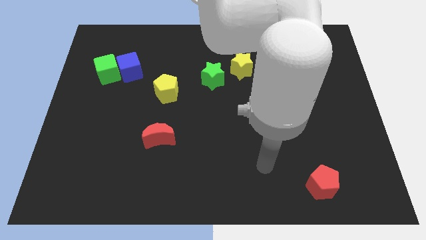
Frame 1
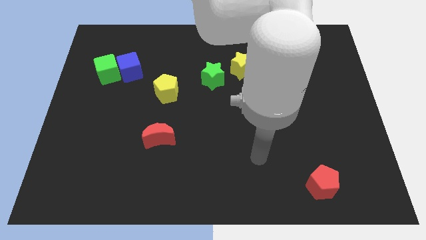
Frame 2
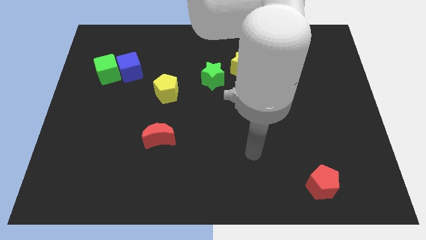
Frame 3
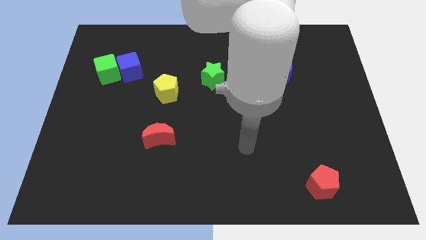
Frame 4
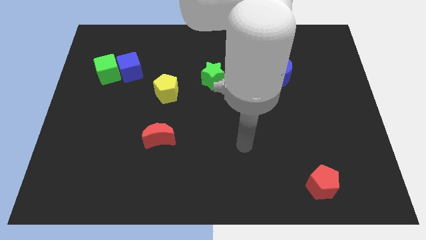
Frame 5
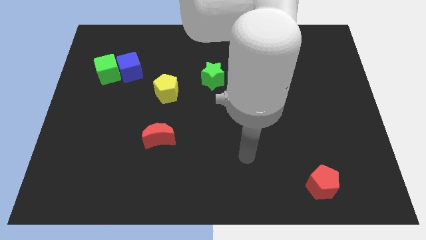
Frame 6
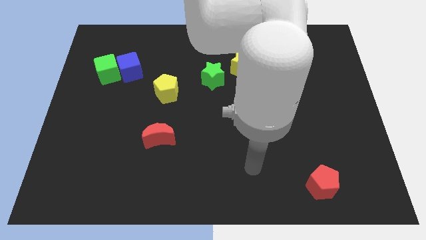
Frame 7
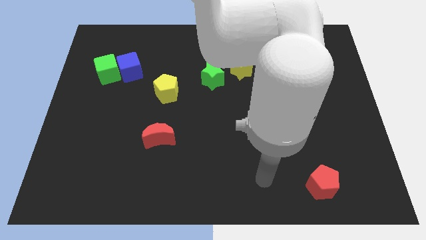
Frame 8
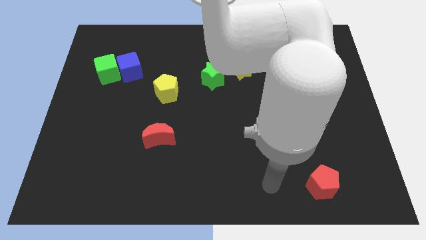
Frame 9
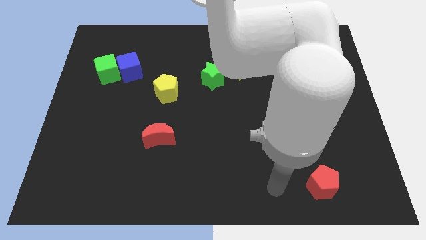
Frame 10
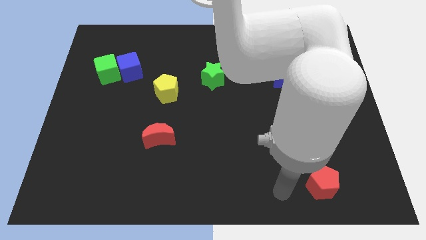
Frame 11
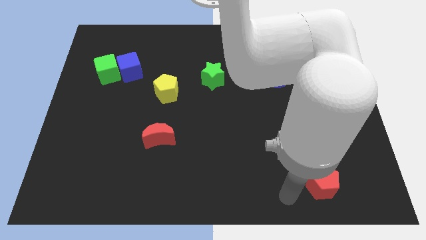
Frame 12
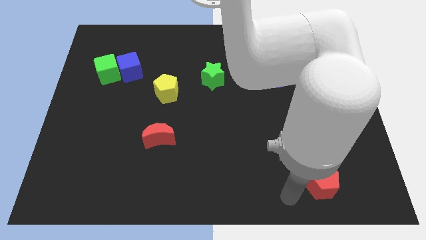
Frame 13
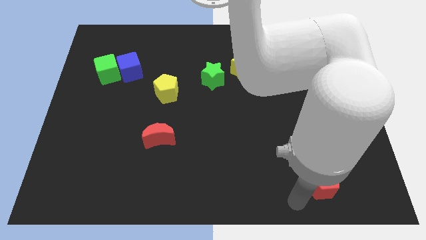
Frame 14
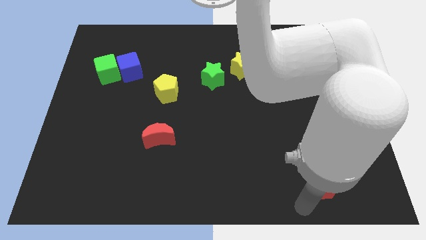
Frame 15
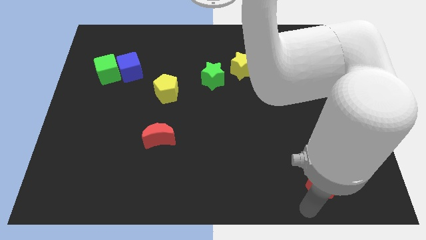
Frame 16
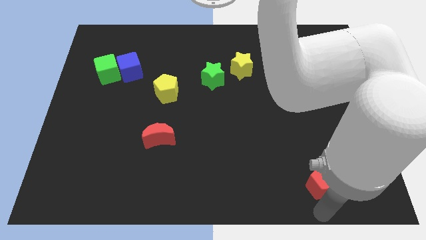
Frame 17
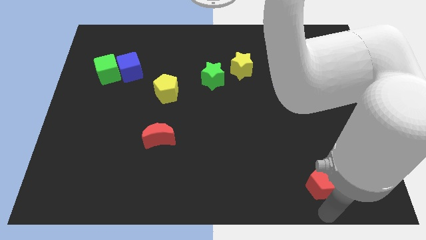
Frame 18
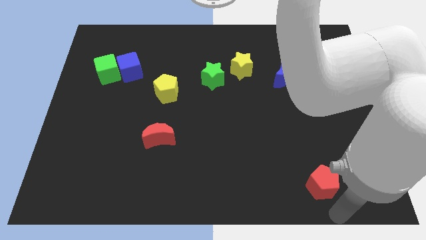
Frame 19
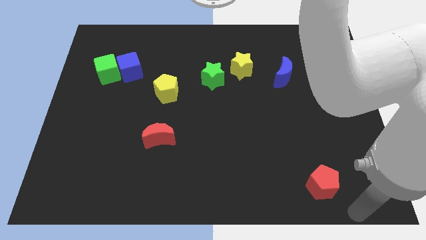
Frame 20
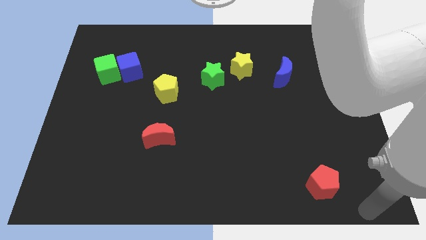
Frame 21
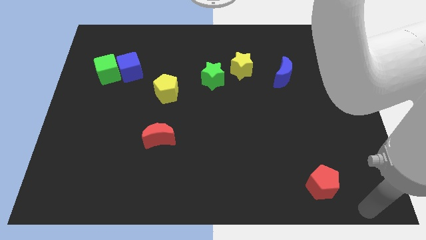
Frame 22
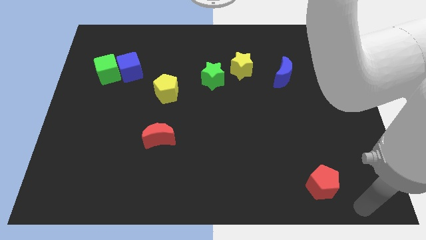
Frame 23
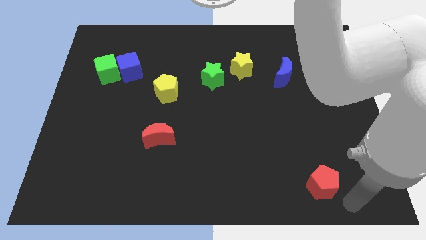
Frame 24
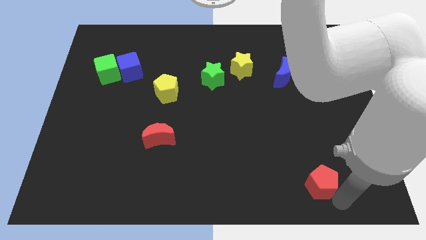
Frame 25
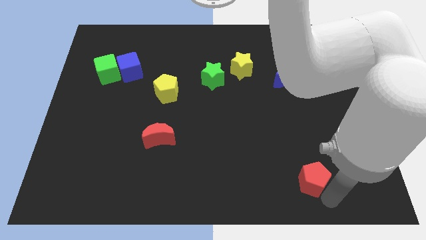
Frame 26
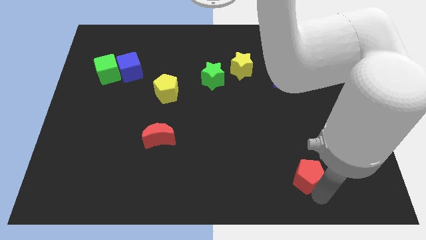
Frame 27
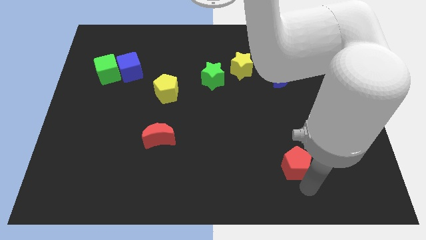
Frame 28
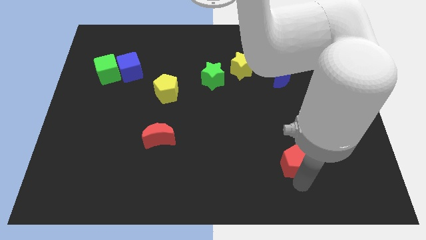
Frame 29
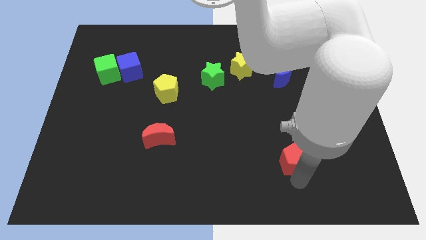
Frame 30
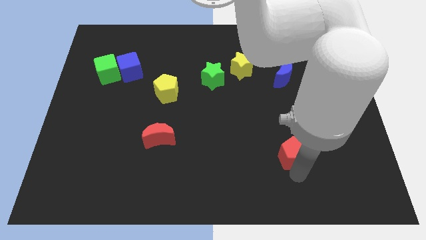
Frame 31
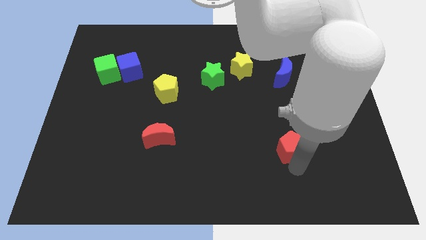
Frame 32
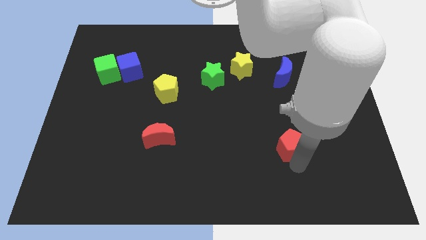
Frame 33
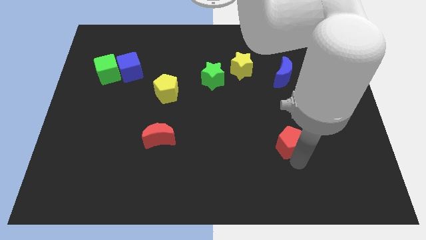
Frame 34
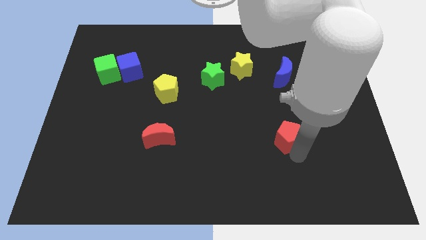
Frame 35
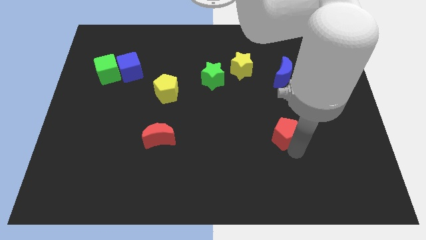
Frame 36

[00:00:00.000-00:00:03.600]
move the red pentagon below the blue crescent

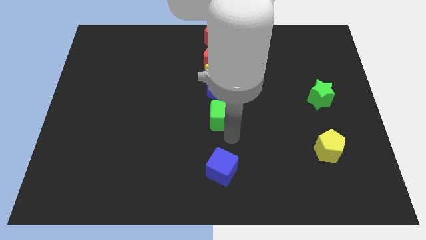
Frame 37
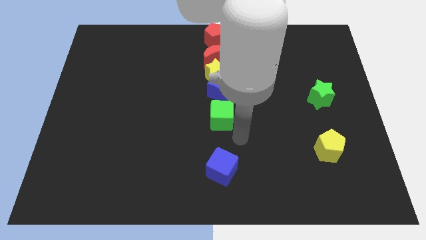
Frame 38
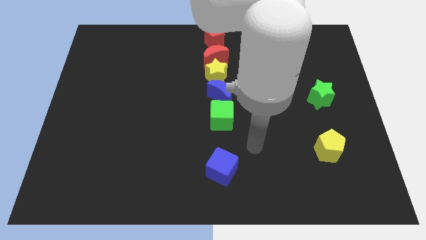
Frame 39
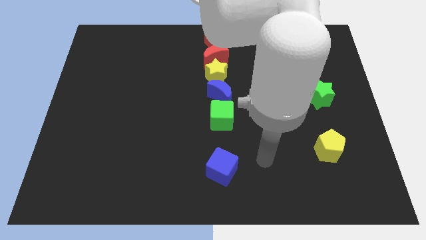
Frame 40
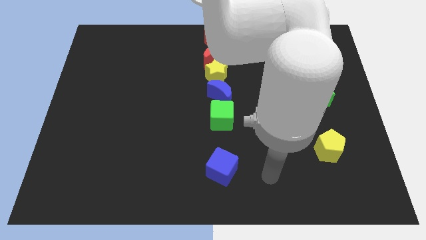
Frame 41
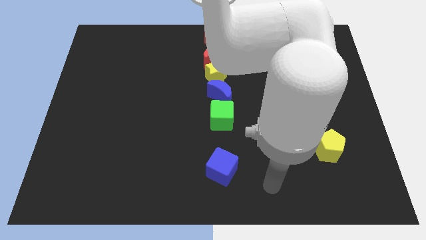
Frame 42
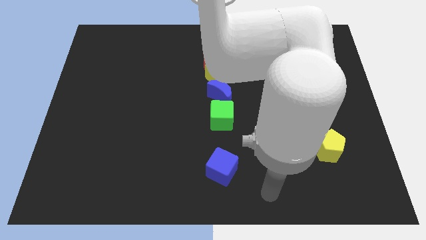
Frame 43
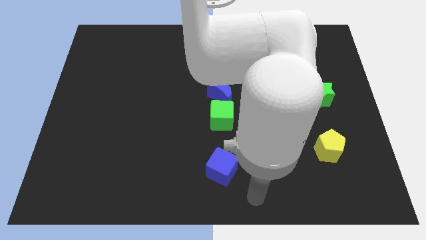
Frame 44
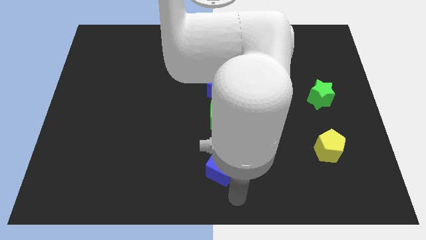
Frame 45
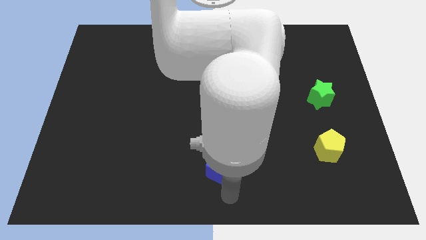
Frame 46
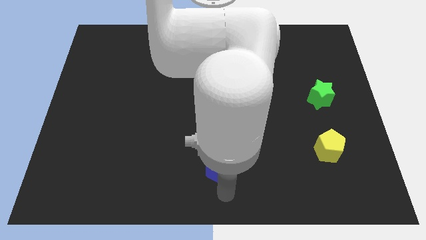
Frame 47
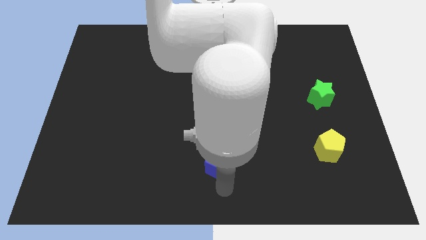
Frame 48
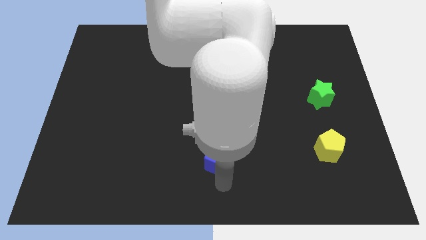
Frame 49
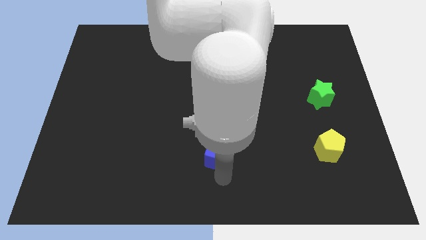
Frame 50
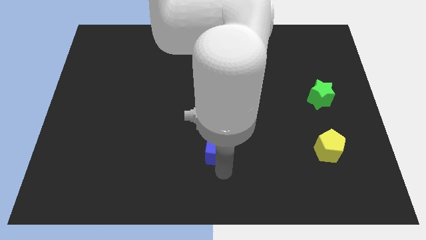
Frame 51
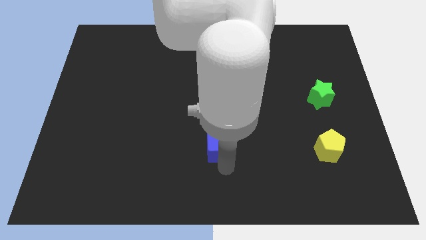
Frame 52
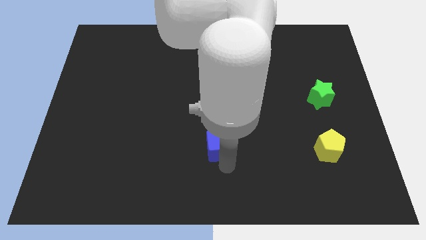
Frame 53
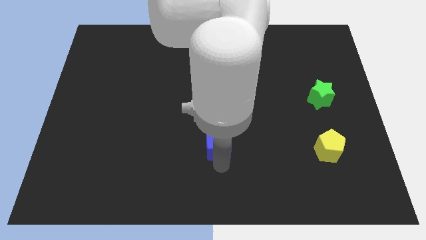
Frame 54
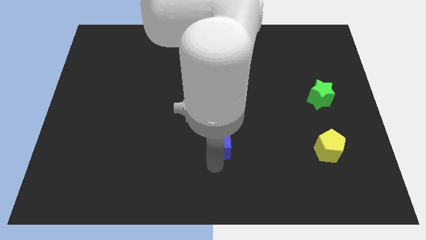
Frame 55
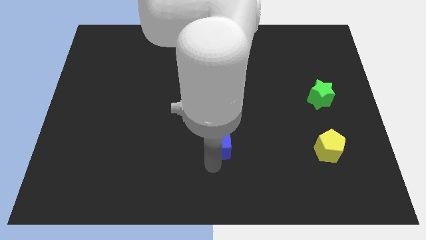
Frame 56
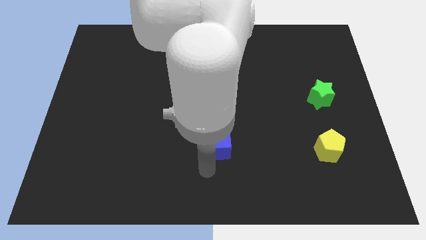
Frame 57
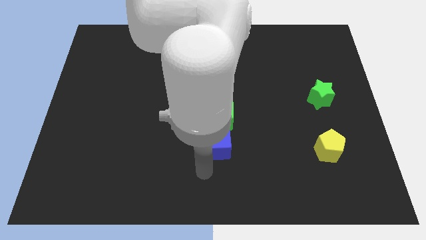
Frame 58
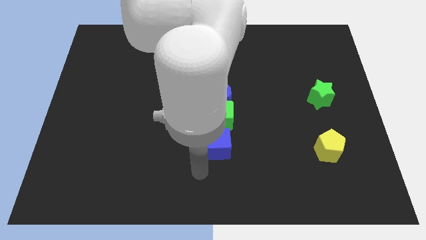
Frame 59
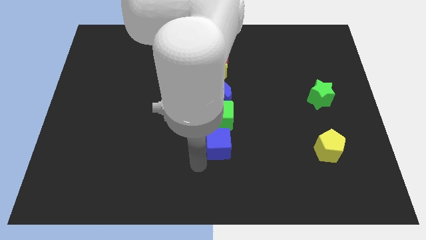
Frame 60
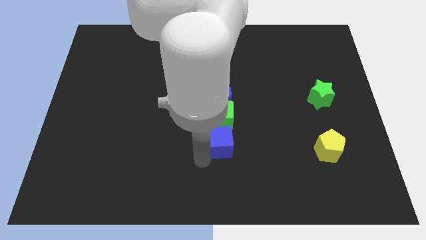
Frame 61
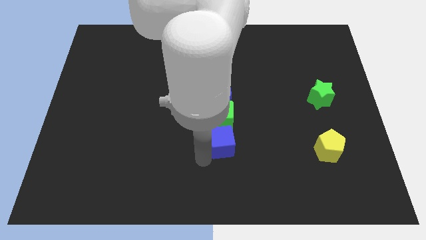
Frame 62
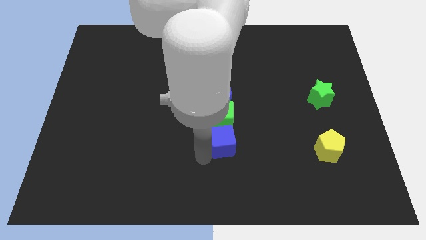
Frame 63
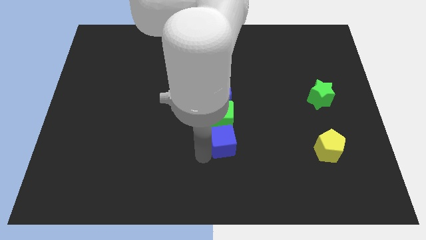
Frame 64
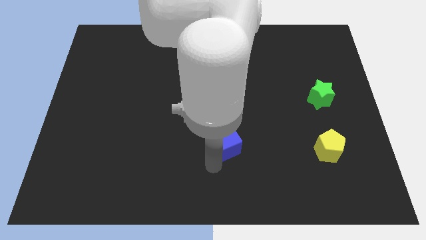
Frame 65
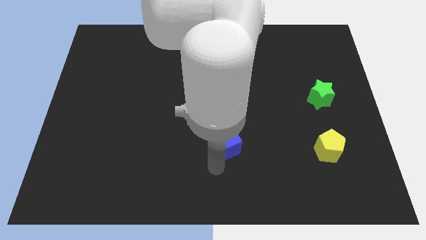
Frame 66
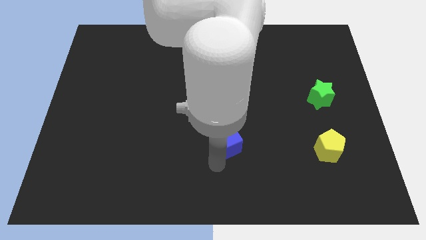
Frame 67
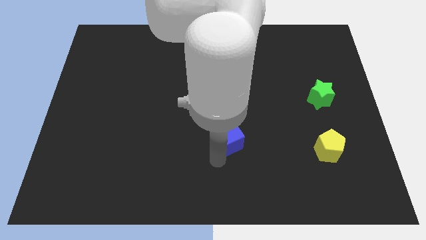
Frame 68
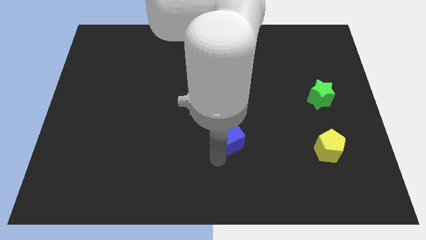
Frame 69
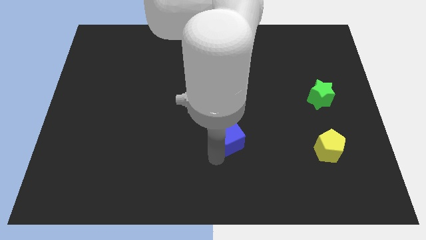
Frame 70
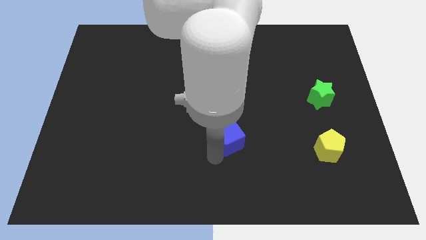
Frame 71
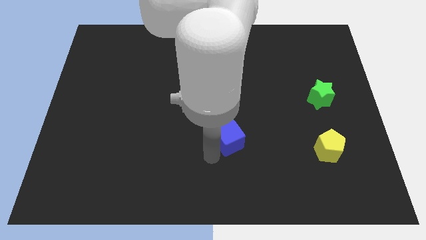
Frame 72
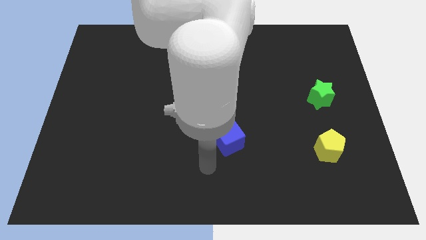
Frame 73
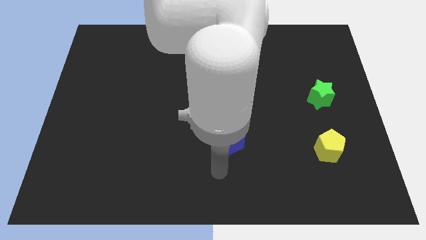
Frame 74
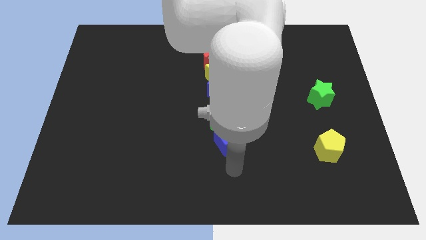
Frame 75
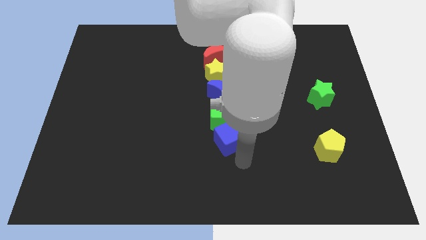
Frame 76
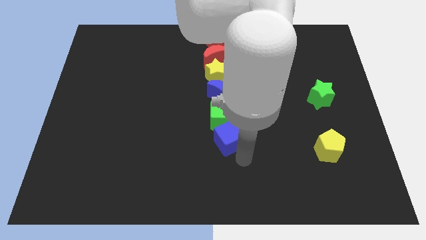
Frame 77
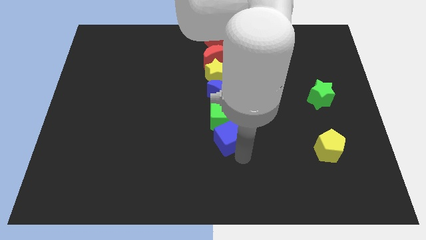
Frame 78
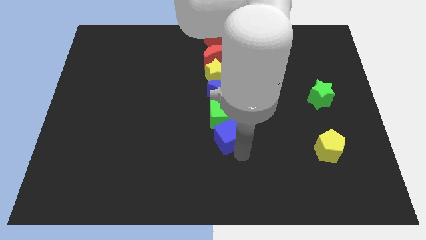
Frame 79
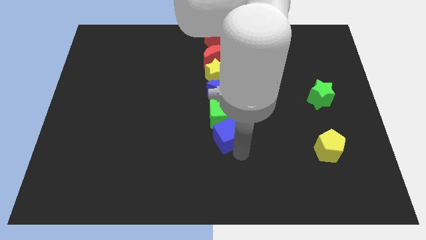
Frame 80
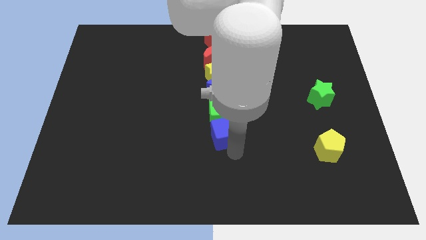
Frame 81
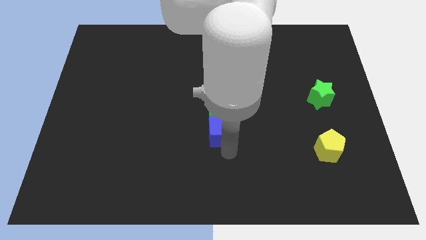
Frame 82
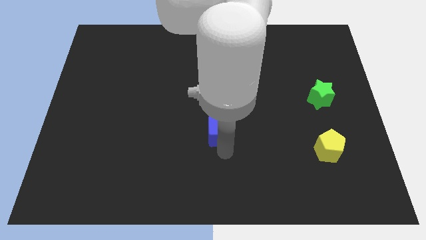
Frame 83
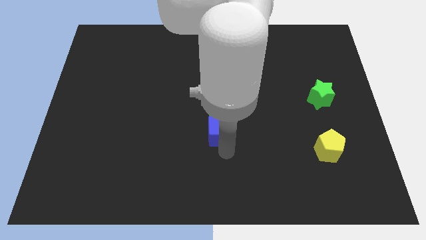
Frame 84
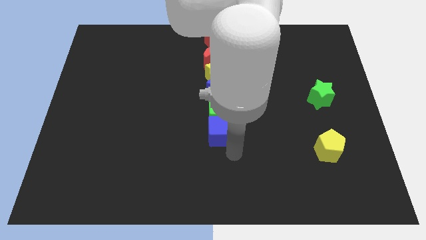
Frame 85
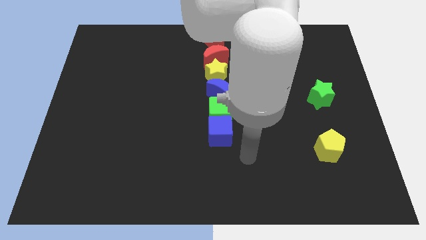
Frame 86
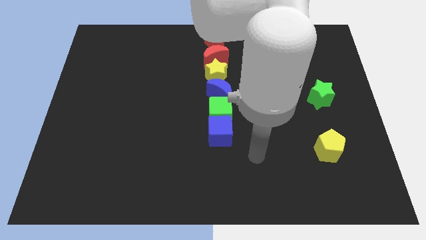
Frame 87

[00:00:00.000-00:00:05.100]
push blue cube close to green cube

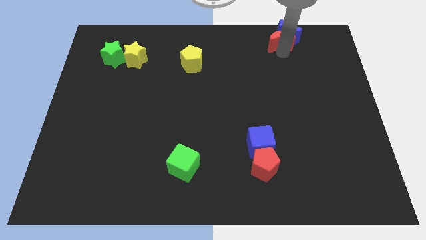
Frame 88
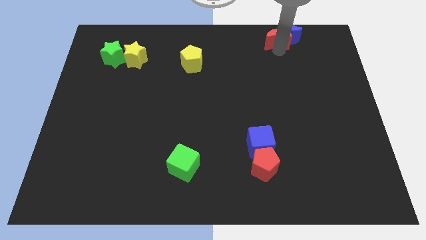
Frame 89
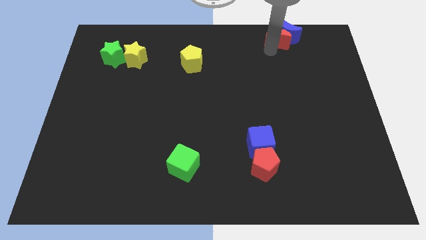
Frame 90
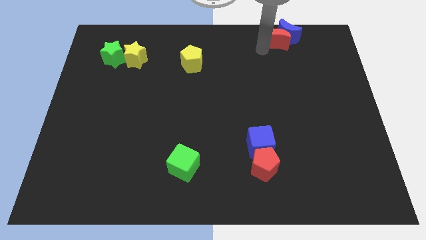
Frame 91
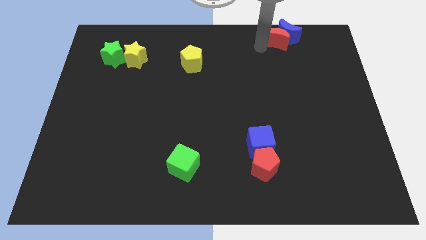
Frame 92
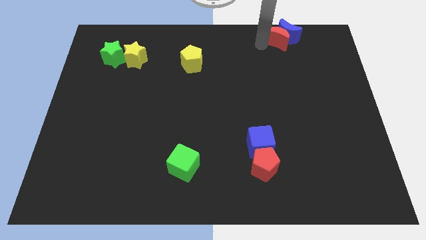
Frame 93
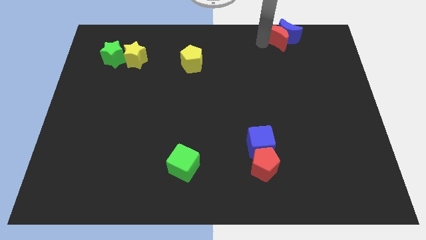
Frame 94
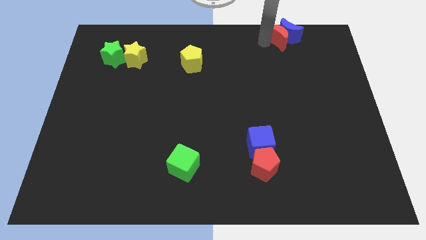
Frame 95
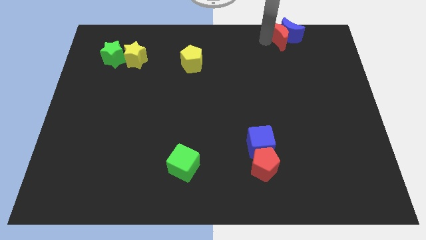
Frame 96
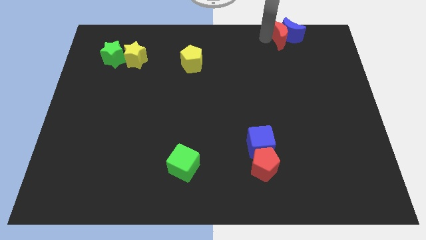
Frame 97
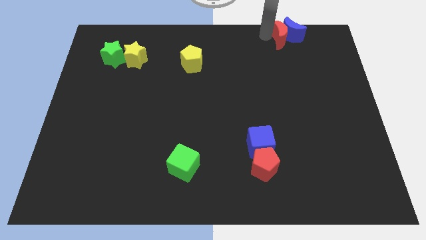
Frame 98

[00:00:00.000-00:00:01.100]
place red moon to left of blue moon
